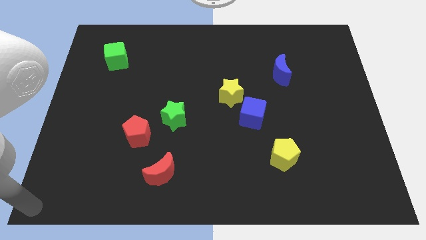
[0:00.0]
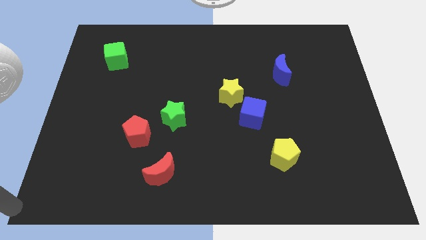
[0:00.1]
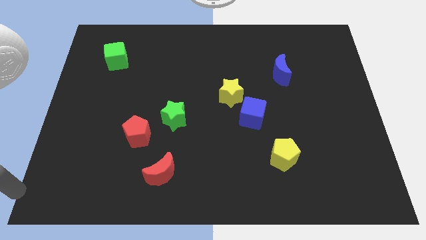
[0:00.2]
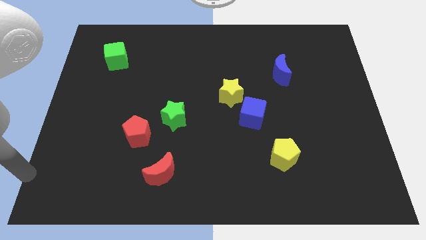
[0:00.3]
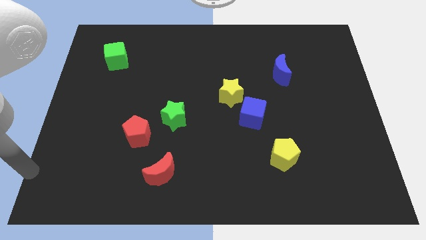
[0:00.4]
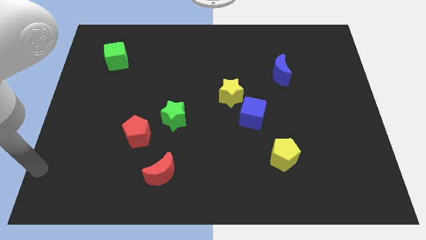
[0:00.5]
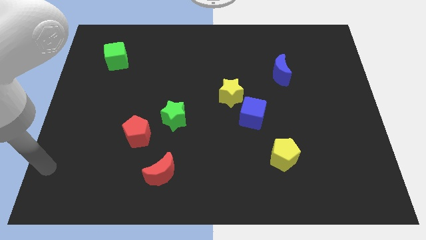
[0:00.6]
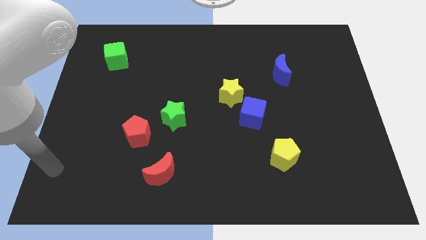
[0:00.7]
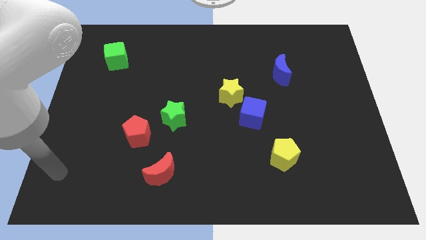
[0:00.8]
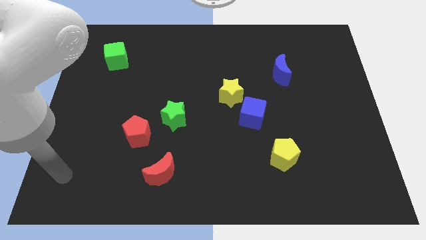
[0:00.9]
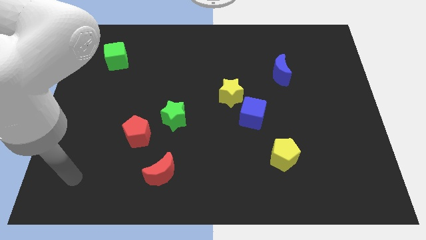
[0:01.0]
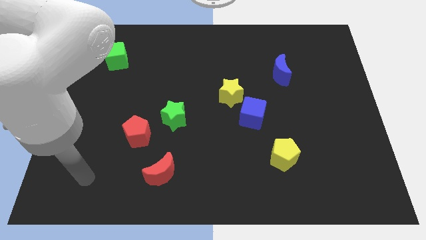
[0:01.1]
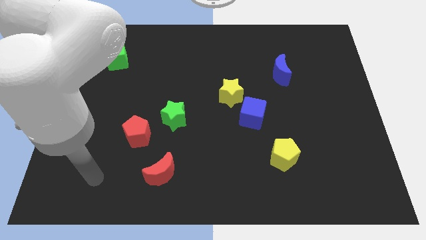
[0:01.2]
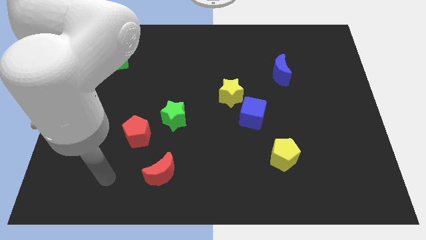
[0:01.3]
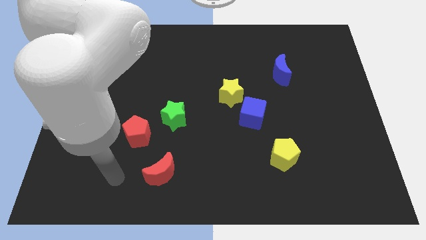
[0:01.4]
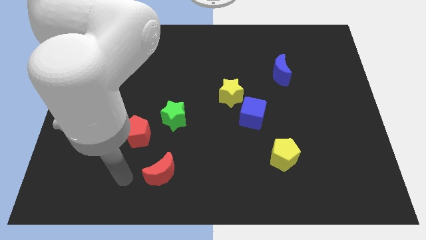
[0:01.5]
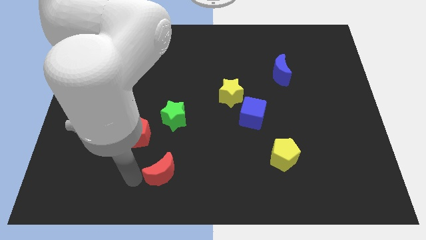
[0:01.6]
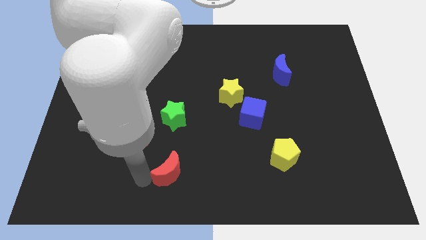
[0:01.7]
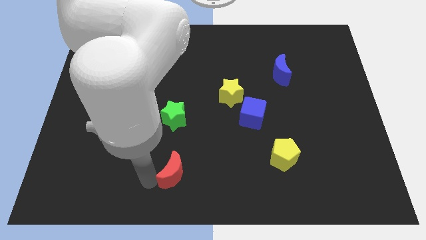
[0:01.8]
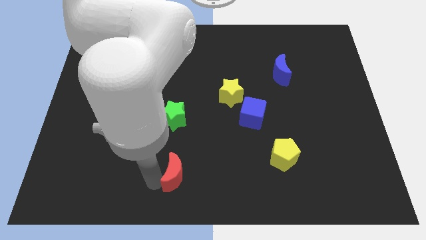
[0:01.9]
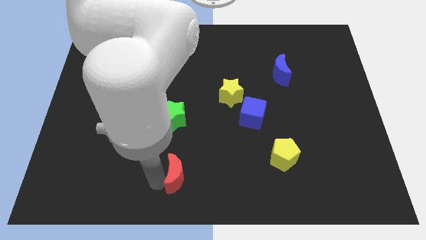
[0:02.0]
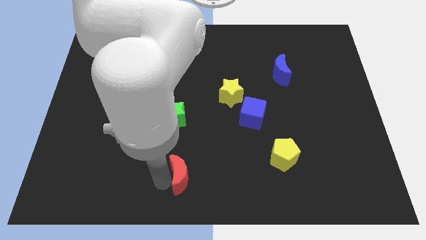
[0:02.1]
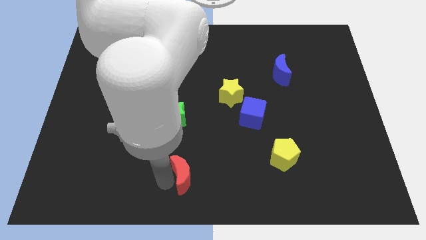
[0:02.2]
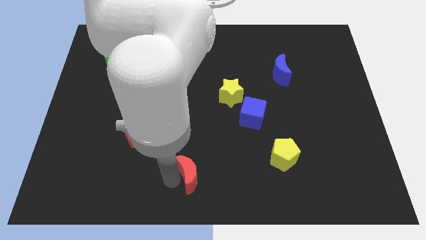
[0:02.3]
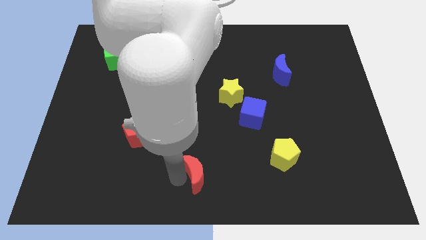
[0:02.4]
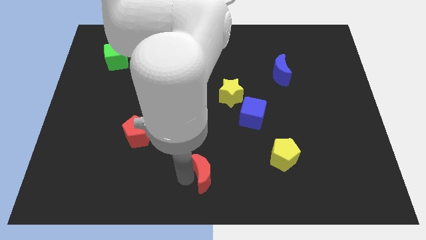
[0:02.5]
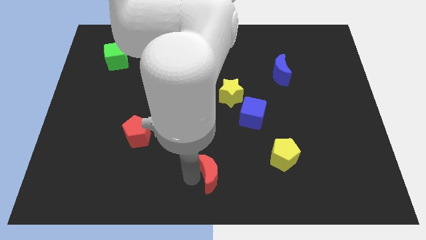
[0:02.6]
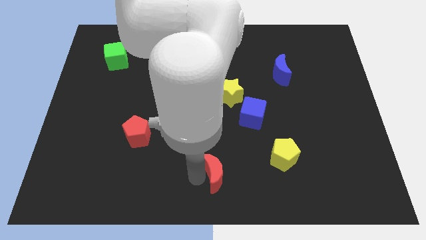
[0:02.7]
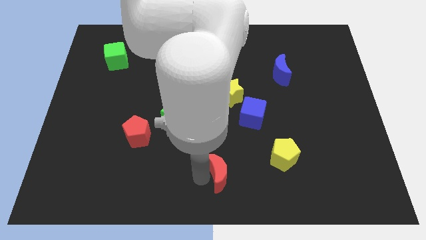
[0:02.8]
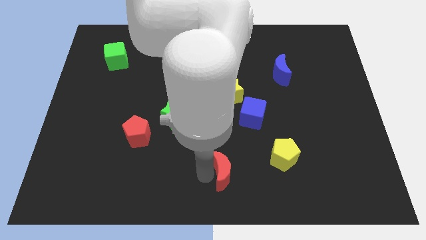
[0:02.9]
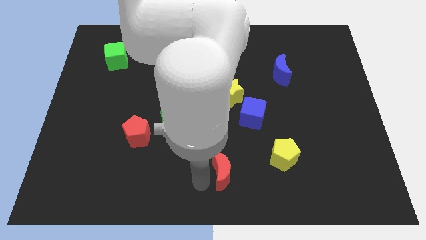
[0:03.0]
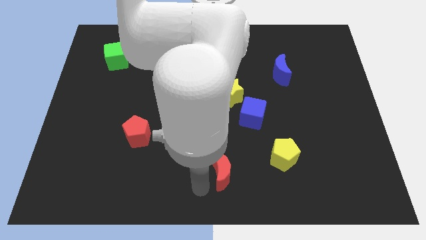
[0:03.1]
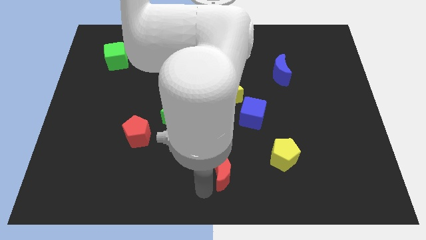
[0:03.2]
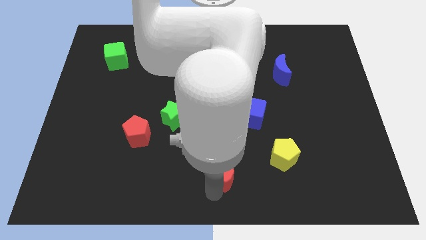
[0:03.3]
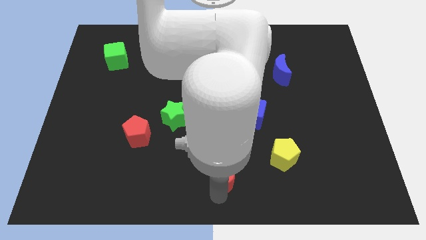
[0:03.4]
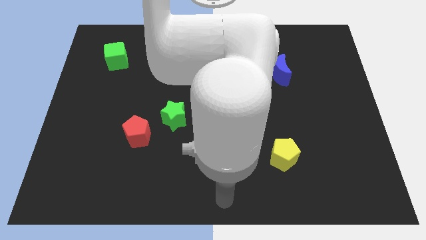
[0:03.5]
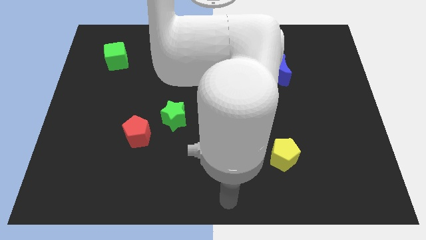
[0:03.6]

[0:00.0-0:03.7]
push the red moon towards the yellow pentagon

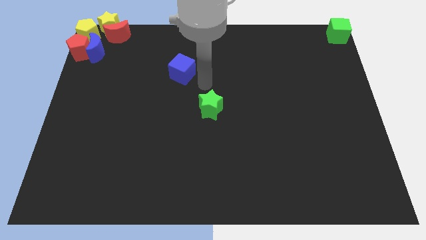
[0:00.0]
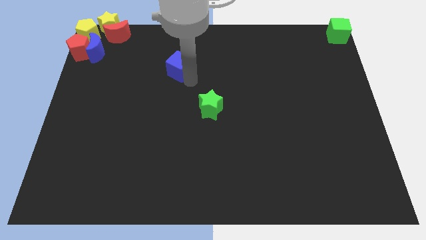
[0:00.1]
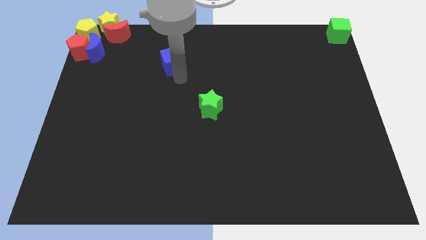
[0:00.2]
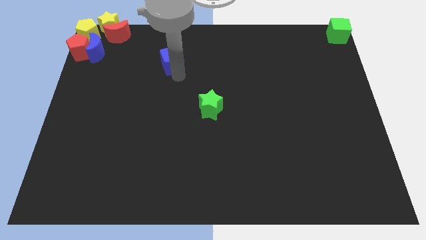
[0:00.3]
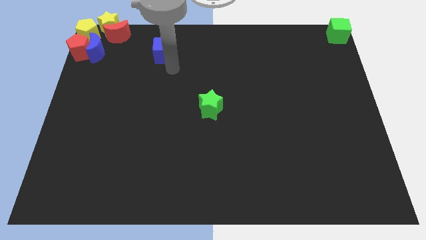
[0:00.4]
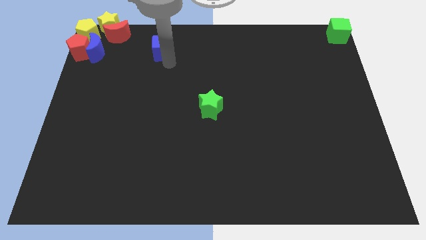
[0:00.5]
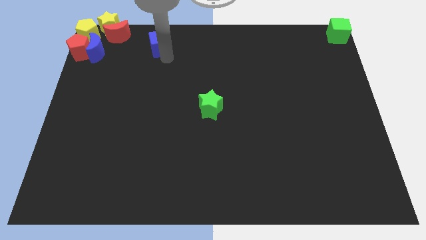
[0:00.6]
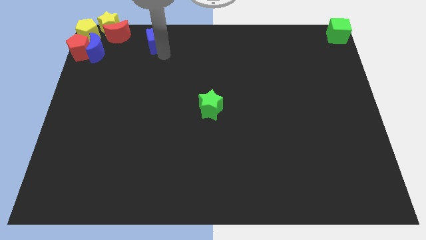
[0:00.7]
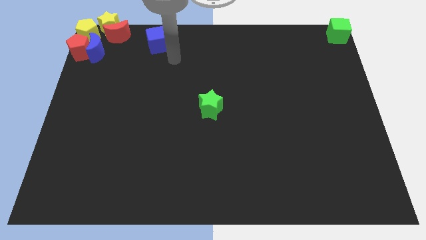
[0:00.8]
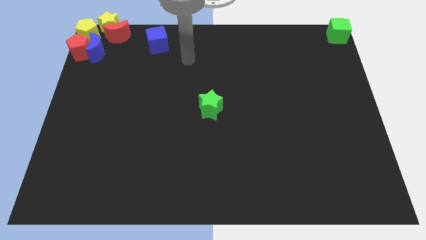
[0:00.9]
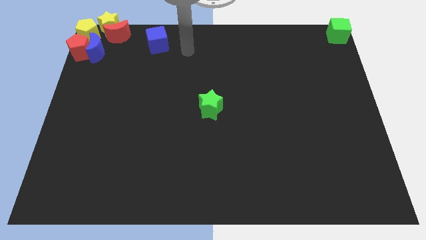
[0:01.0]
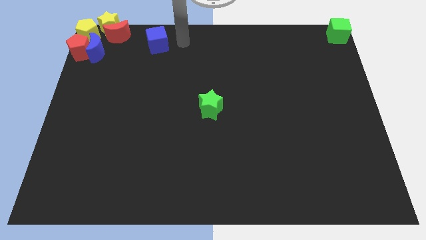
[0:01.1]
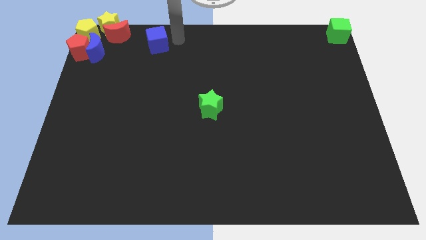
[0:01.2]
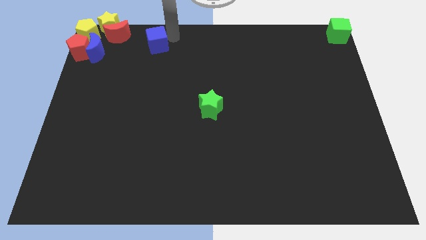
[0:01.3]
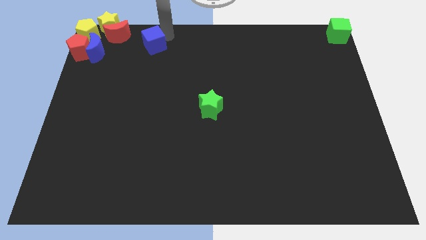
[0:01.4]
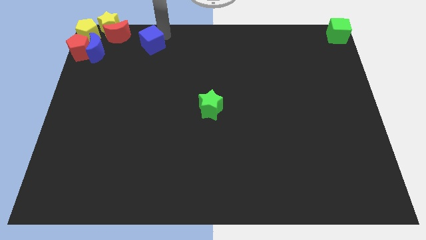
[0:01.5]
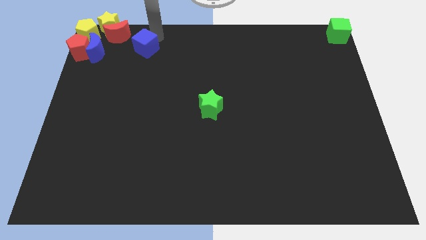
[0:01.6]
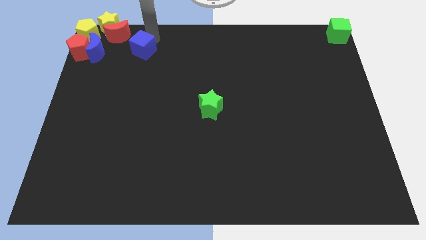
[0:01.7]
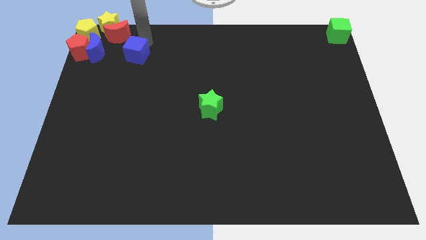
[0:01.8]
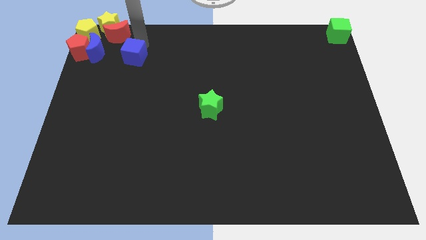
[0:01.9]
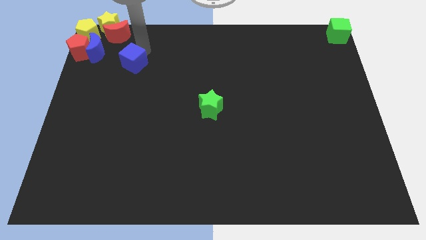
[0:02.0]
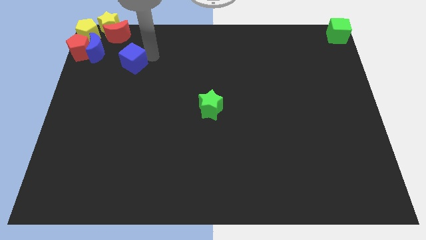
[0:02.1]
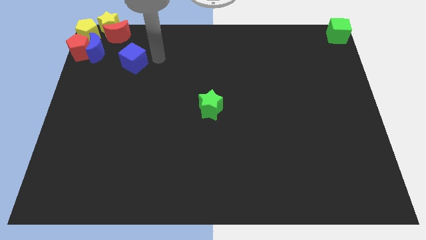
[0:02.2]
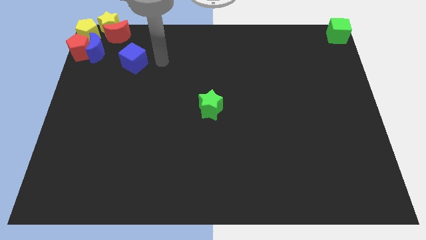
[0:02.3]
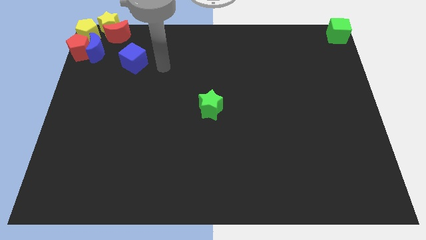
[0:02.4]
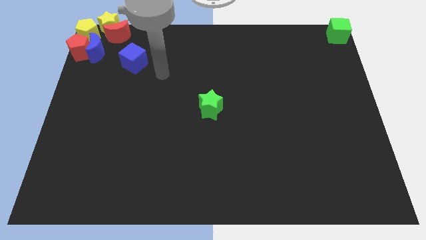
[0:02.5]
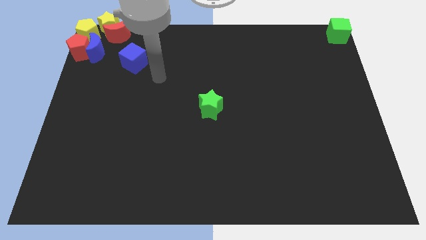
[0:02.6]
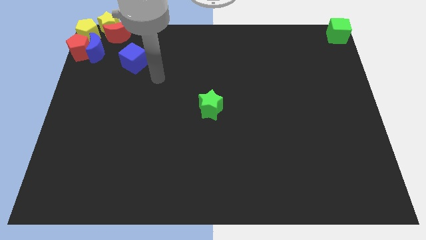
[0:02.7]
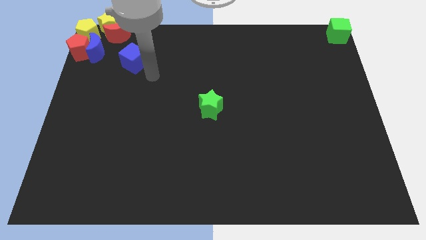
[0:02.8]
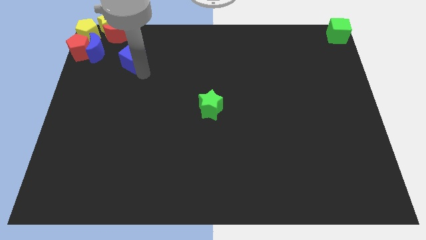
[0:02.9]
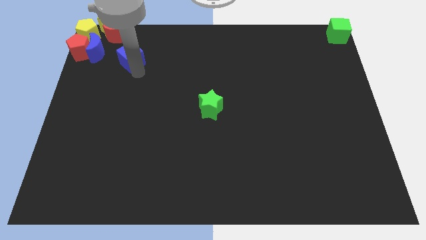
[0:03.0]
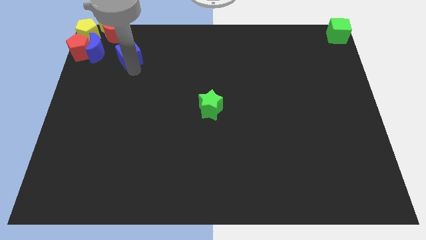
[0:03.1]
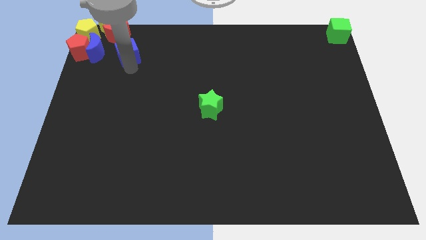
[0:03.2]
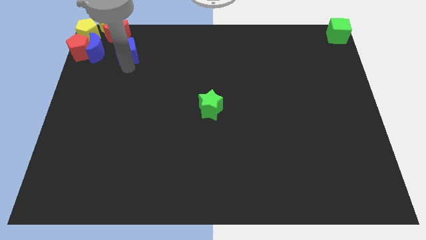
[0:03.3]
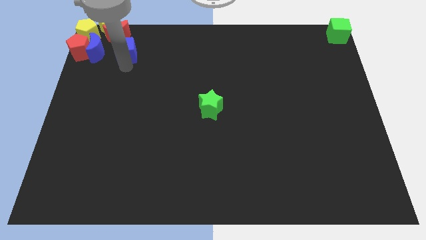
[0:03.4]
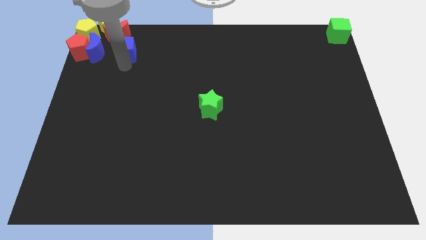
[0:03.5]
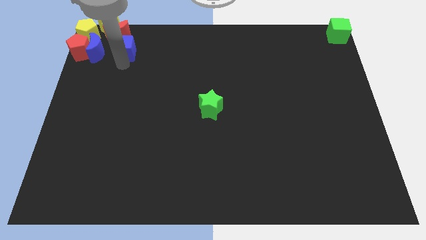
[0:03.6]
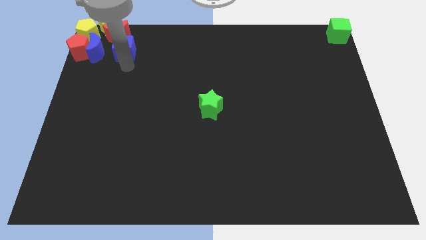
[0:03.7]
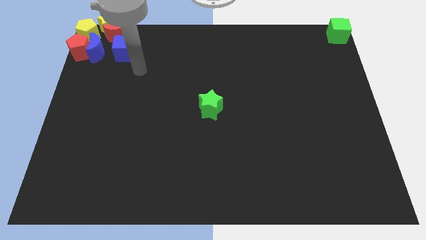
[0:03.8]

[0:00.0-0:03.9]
move the blue cube to the group of blocks

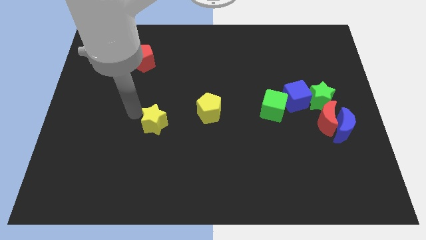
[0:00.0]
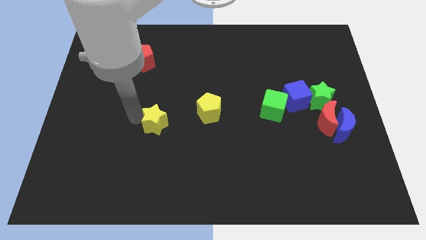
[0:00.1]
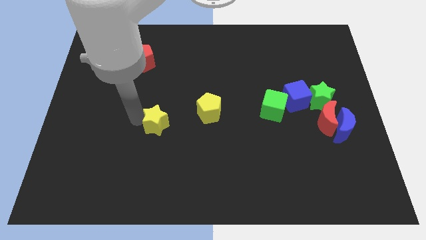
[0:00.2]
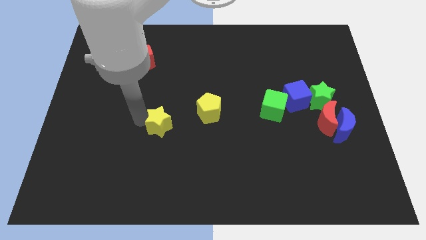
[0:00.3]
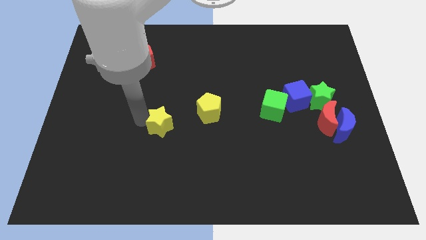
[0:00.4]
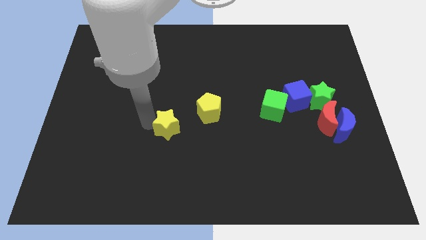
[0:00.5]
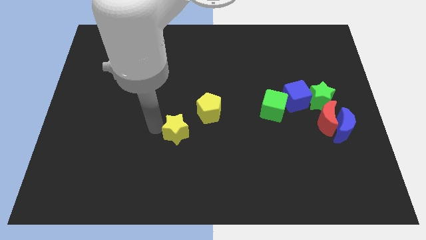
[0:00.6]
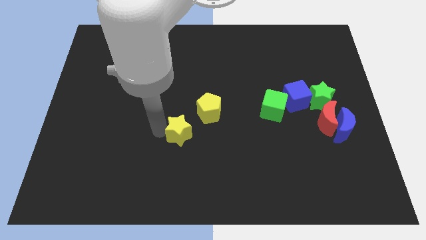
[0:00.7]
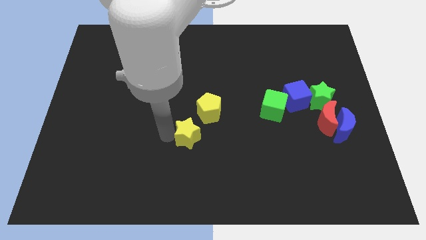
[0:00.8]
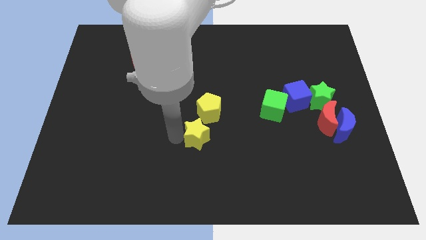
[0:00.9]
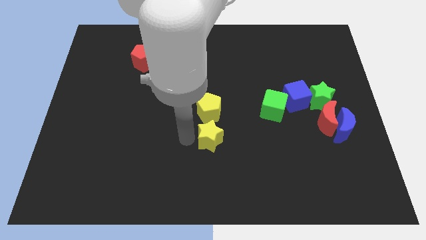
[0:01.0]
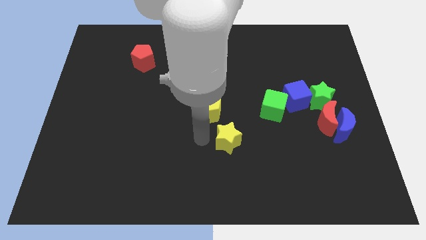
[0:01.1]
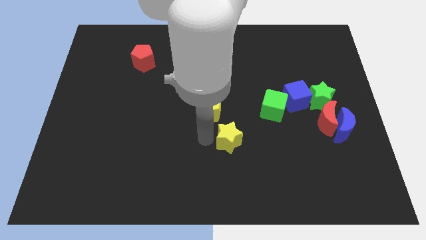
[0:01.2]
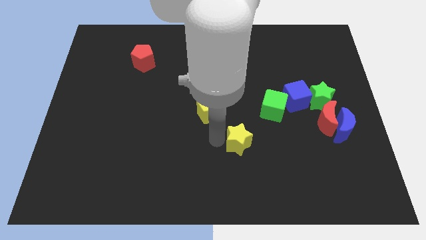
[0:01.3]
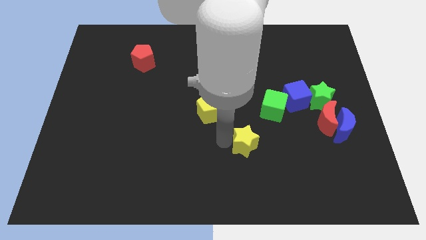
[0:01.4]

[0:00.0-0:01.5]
push the yellow star to the center
